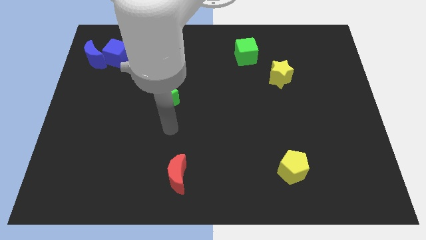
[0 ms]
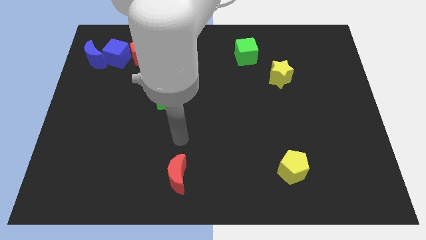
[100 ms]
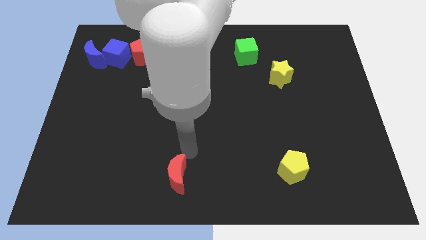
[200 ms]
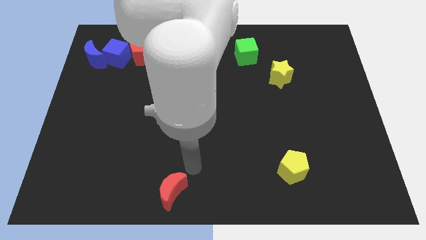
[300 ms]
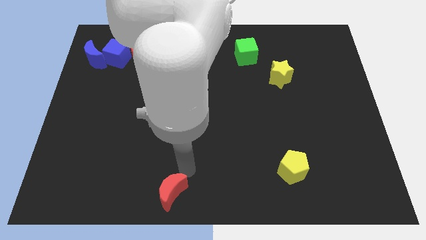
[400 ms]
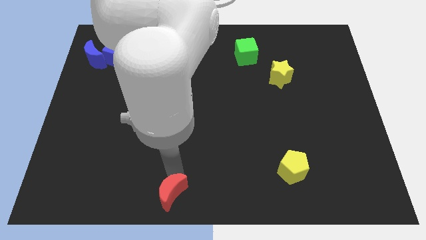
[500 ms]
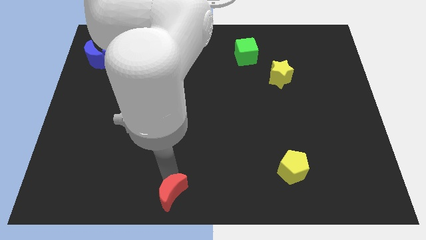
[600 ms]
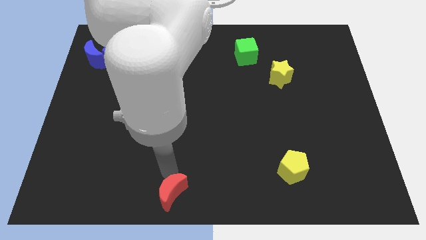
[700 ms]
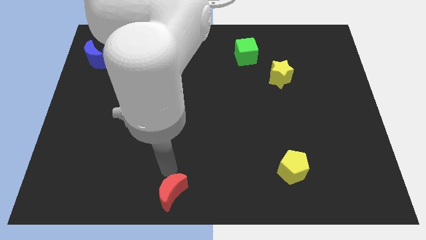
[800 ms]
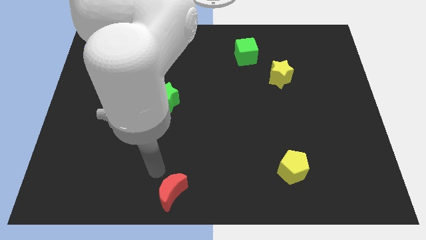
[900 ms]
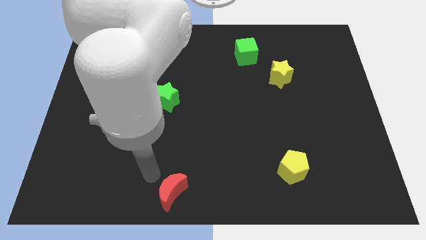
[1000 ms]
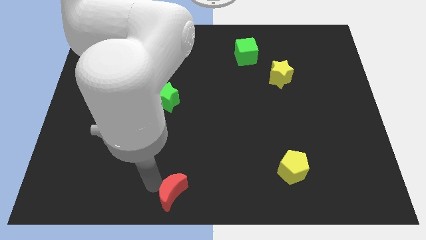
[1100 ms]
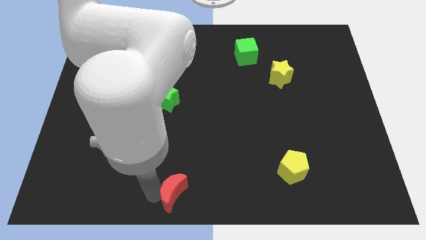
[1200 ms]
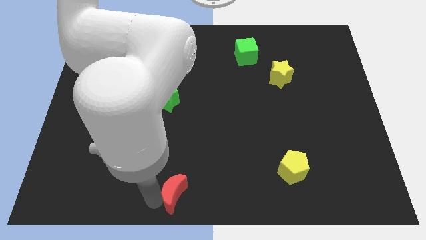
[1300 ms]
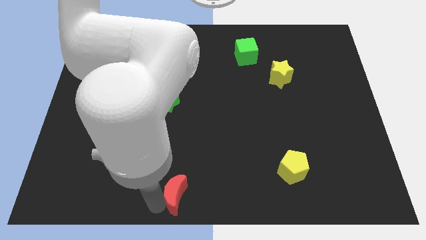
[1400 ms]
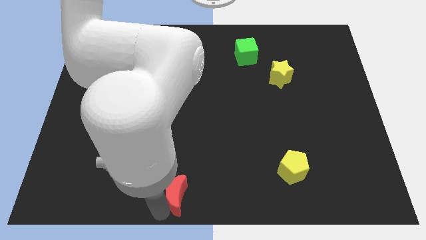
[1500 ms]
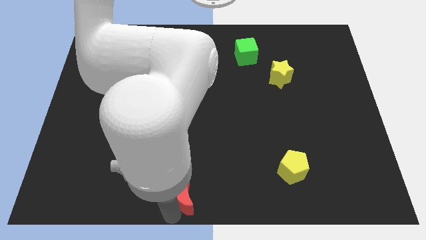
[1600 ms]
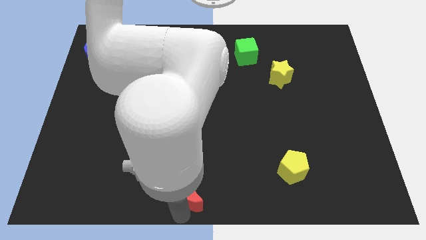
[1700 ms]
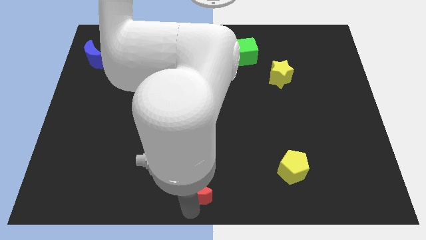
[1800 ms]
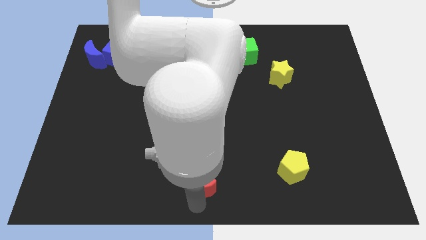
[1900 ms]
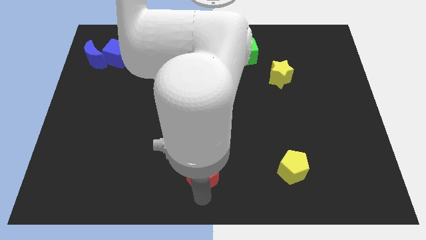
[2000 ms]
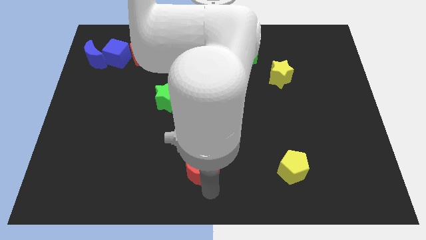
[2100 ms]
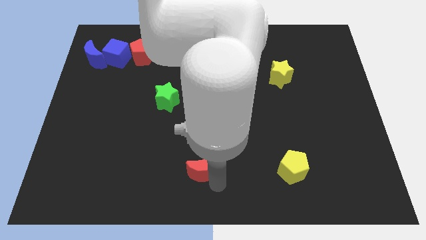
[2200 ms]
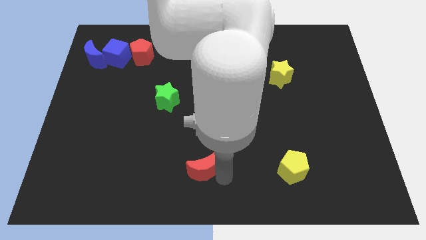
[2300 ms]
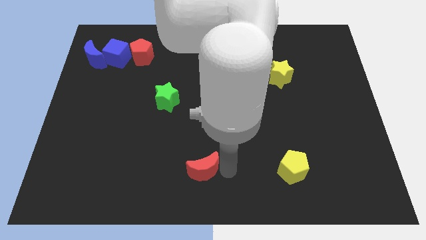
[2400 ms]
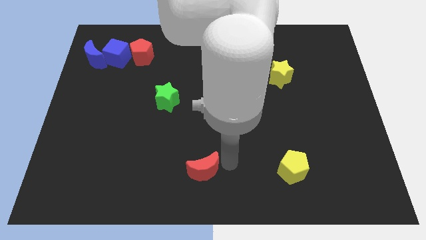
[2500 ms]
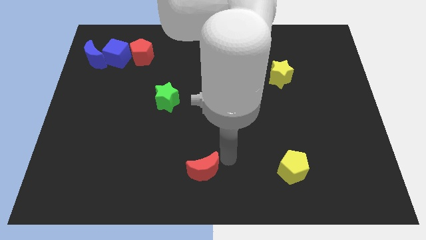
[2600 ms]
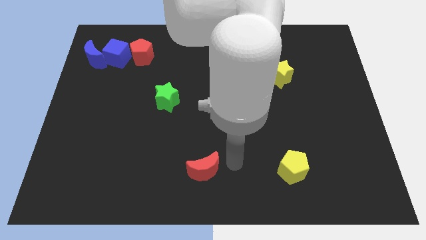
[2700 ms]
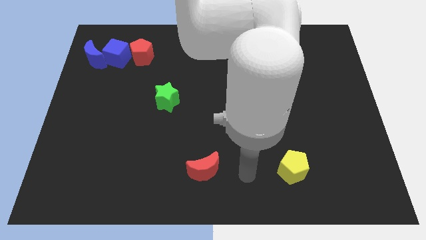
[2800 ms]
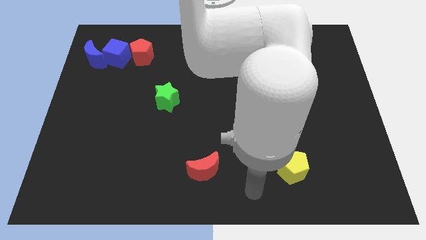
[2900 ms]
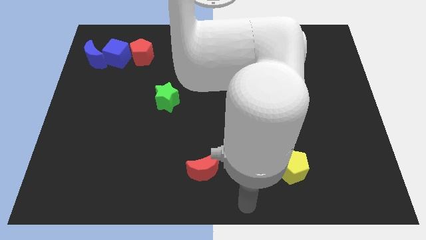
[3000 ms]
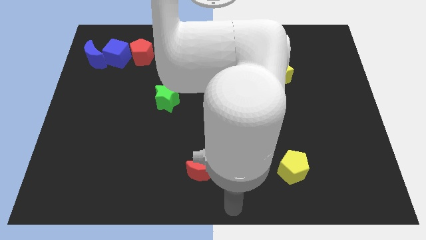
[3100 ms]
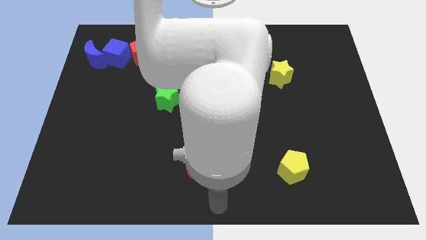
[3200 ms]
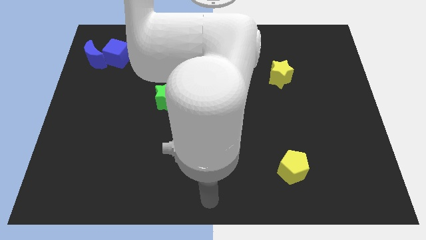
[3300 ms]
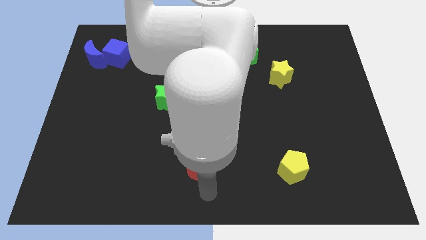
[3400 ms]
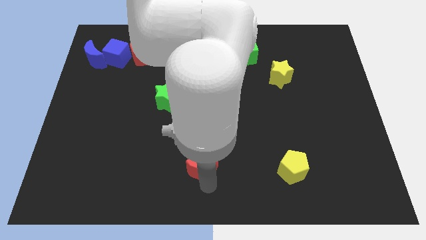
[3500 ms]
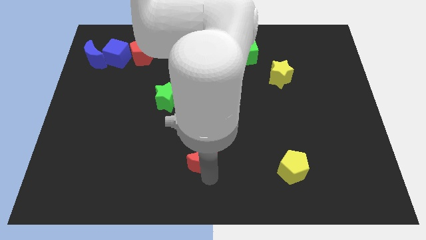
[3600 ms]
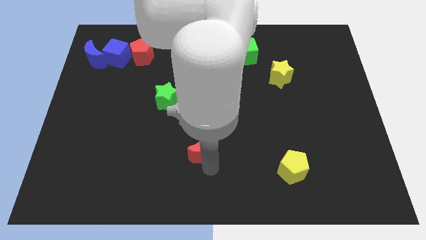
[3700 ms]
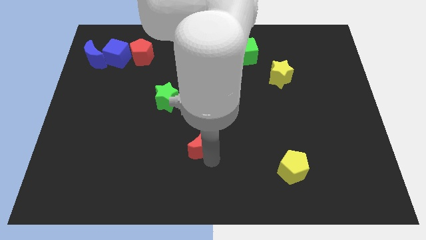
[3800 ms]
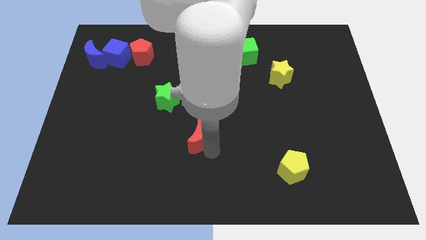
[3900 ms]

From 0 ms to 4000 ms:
move the red crescent to the top of the board

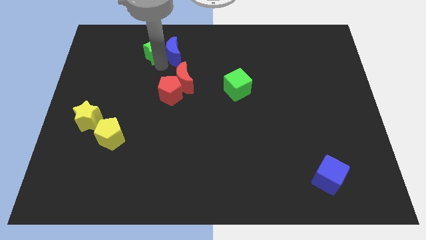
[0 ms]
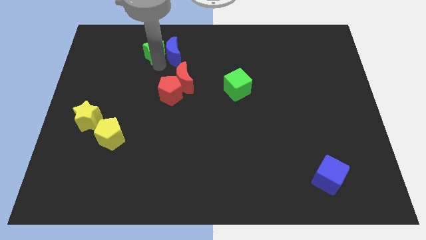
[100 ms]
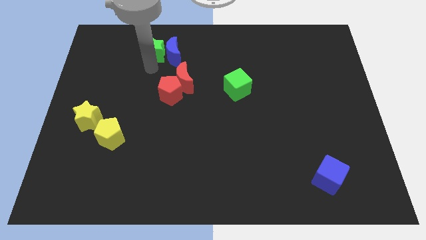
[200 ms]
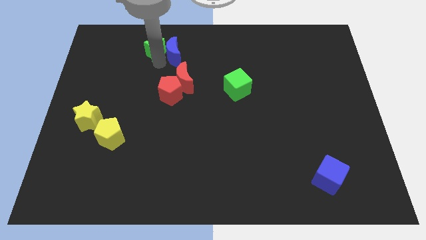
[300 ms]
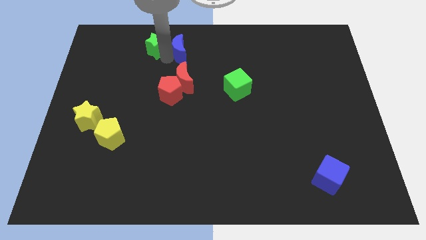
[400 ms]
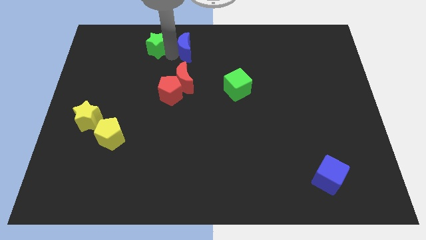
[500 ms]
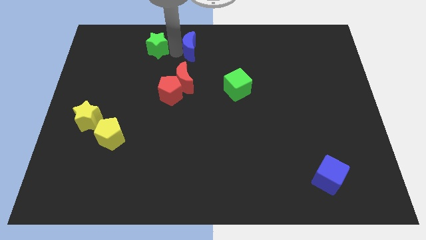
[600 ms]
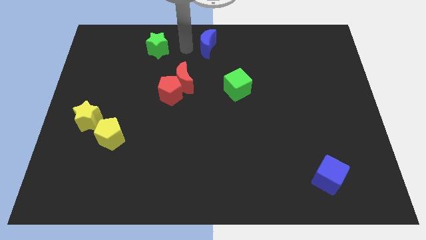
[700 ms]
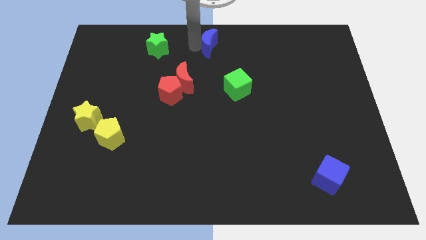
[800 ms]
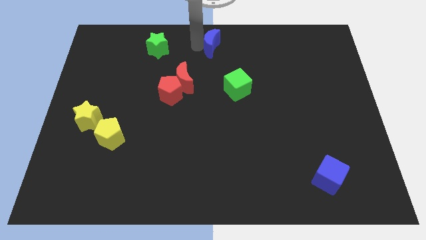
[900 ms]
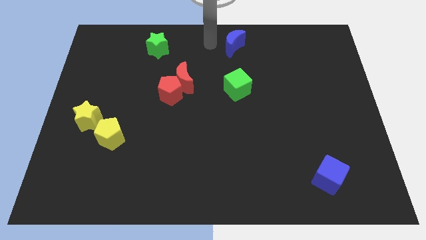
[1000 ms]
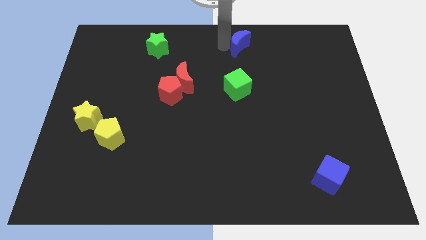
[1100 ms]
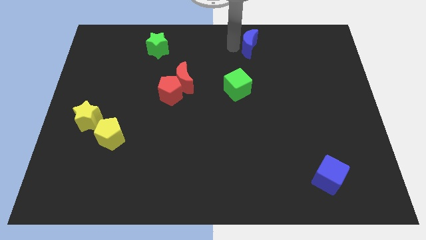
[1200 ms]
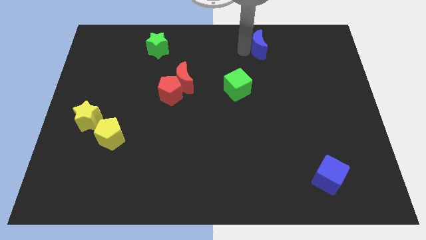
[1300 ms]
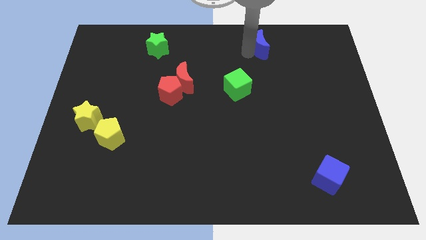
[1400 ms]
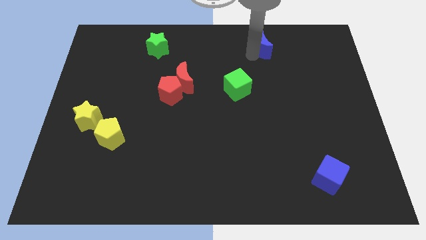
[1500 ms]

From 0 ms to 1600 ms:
move the blue crescent away from the right side of the green star

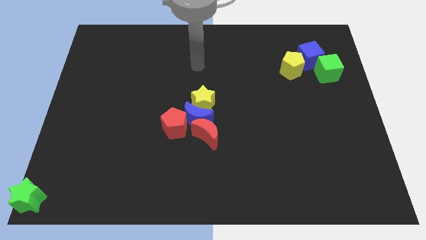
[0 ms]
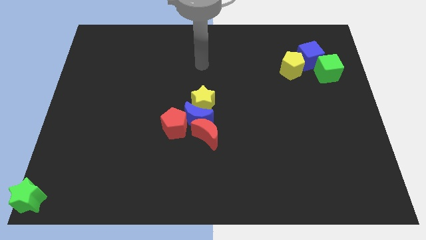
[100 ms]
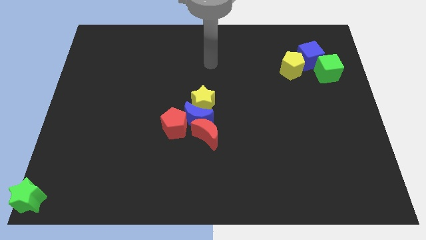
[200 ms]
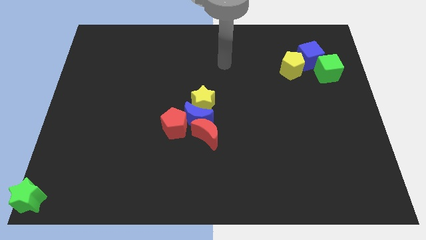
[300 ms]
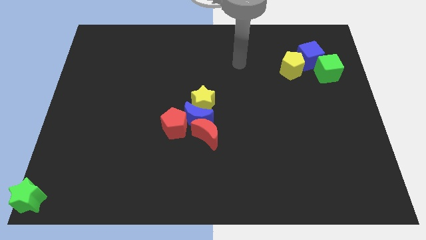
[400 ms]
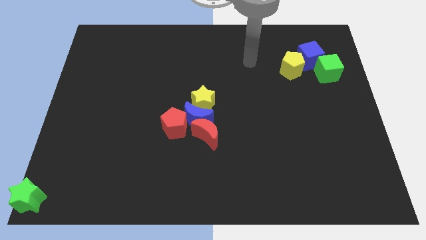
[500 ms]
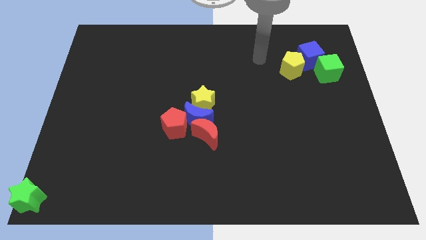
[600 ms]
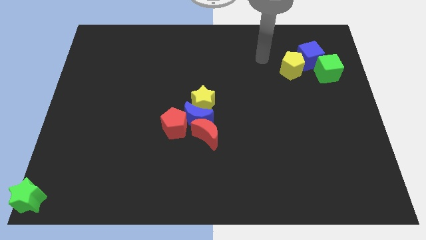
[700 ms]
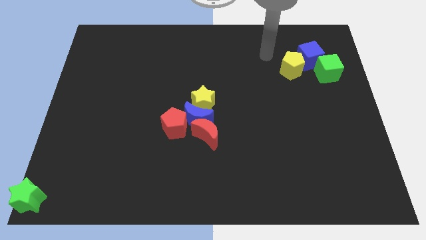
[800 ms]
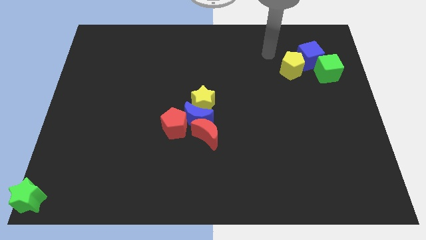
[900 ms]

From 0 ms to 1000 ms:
move your arm towards the right side of the board

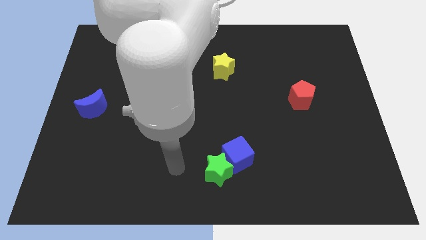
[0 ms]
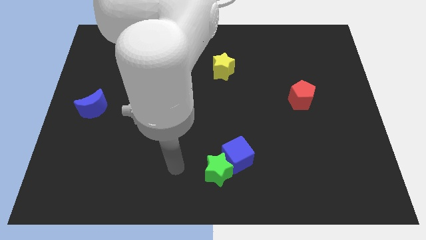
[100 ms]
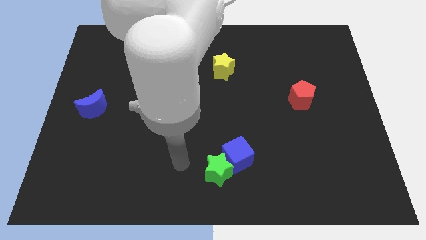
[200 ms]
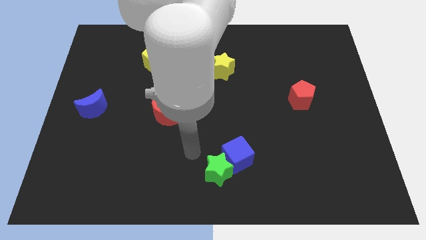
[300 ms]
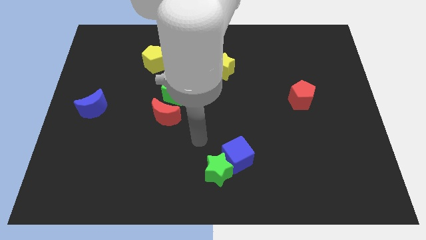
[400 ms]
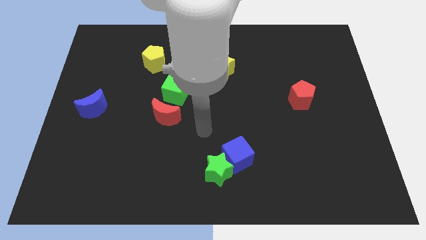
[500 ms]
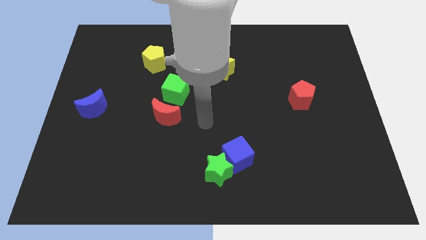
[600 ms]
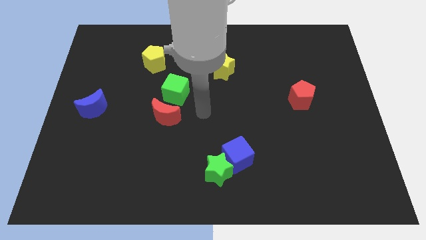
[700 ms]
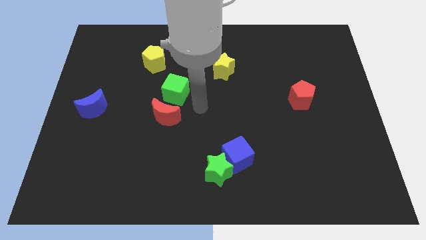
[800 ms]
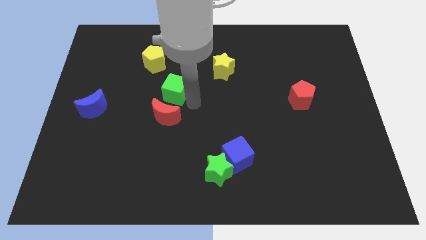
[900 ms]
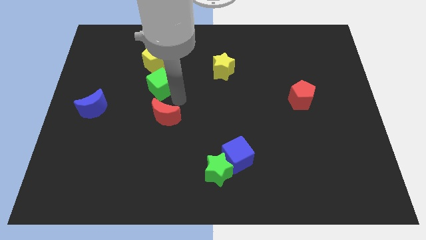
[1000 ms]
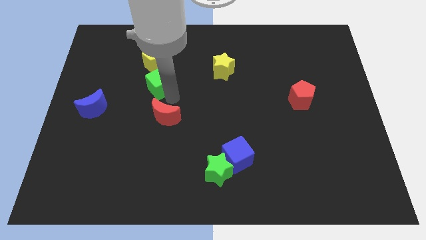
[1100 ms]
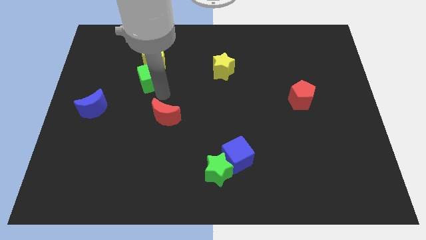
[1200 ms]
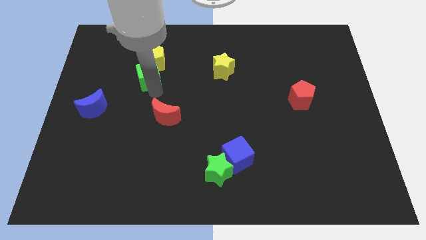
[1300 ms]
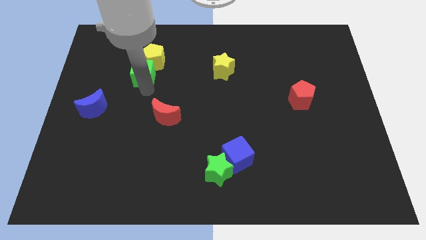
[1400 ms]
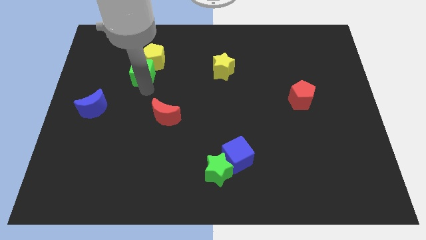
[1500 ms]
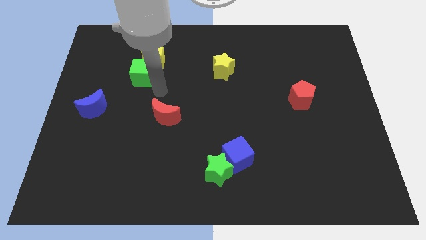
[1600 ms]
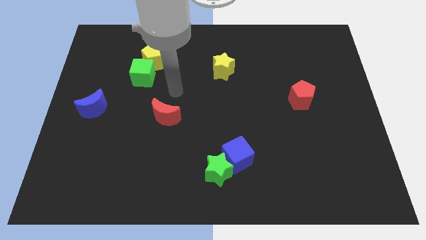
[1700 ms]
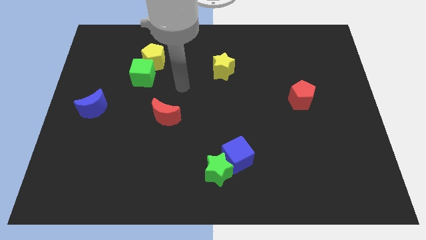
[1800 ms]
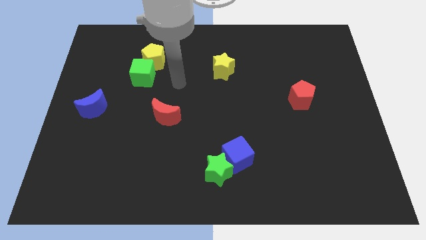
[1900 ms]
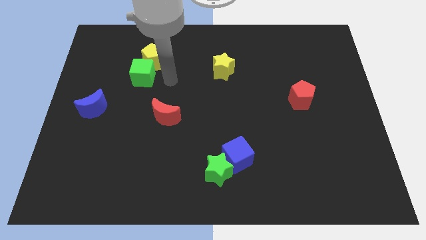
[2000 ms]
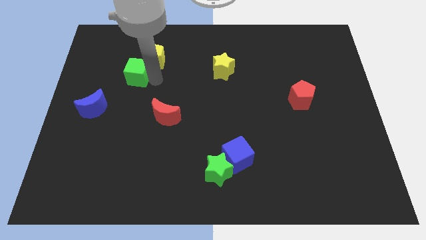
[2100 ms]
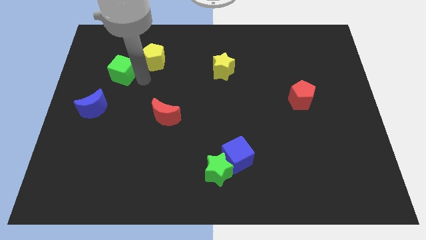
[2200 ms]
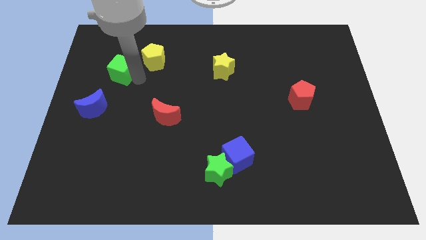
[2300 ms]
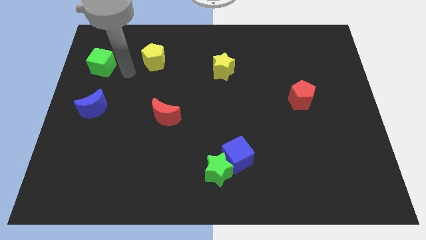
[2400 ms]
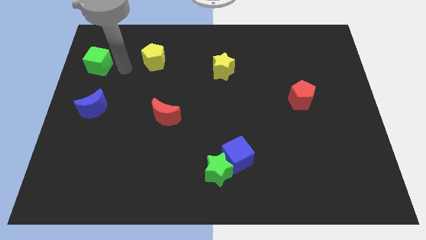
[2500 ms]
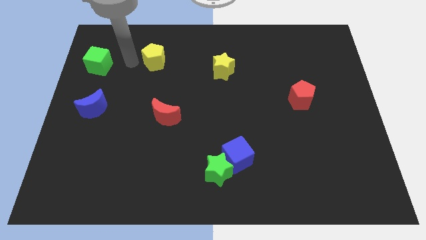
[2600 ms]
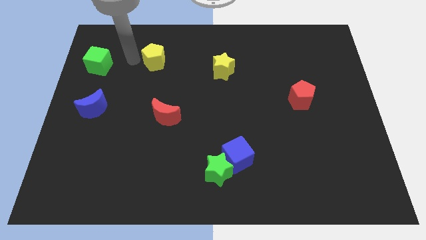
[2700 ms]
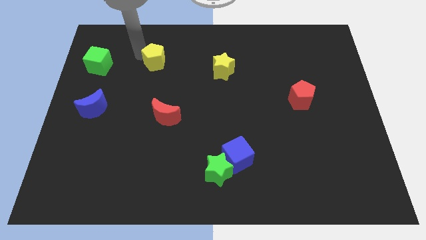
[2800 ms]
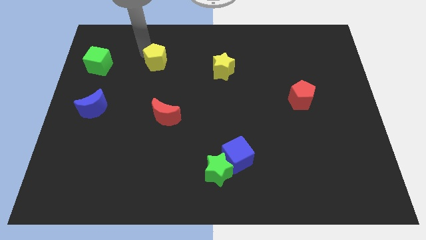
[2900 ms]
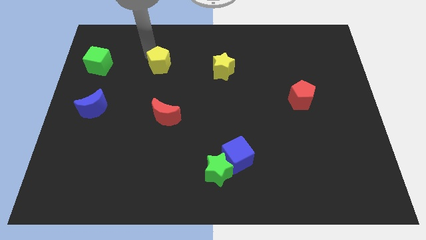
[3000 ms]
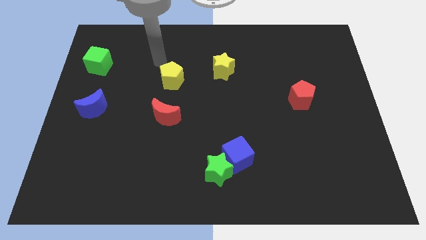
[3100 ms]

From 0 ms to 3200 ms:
separate red moon and green cube
